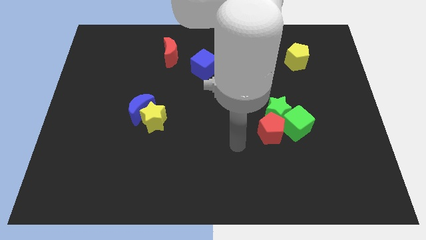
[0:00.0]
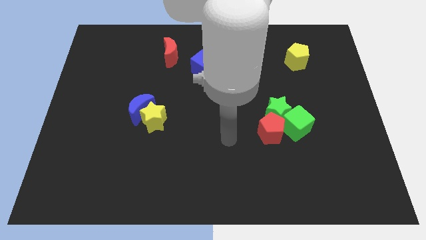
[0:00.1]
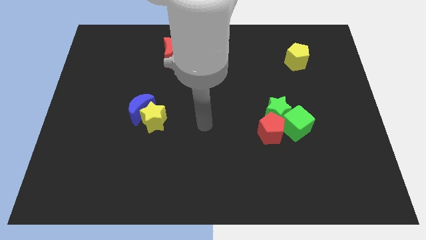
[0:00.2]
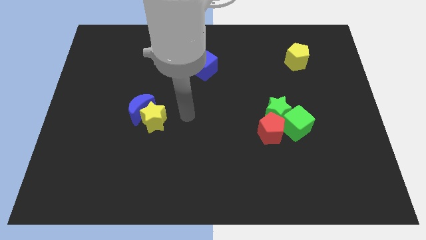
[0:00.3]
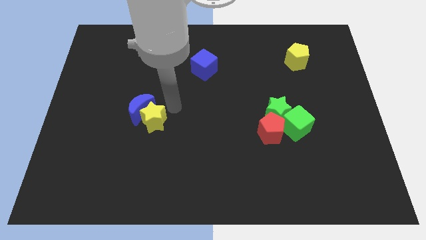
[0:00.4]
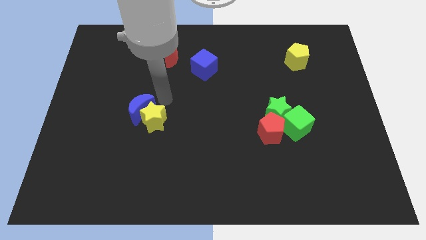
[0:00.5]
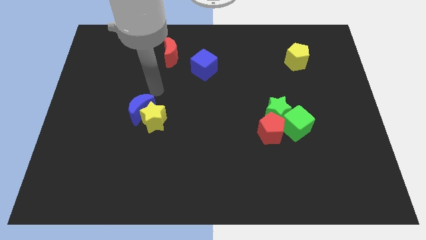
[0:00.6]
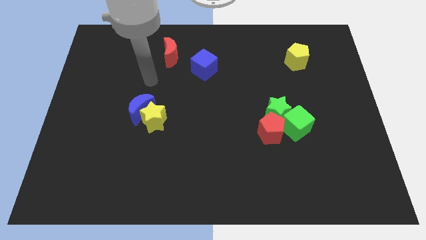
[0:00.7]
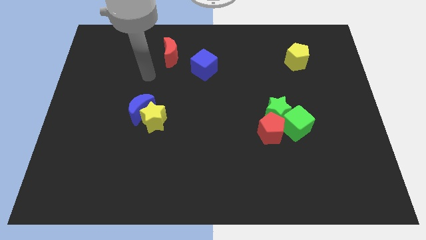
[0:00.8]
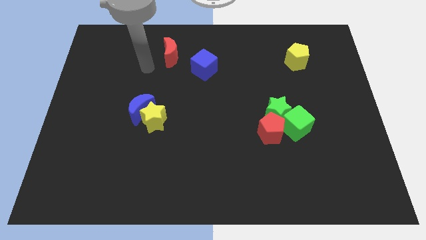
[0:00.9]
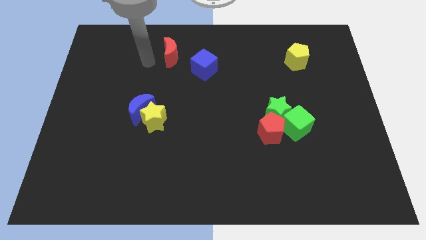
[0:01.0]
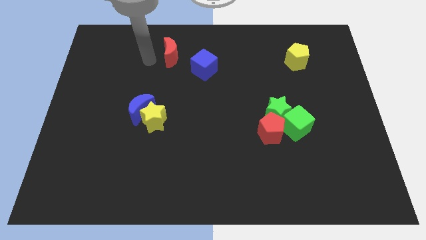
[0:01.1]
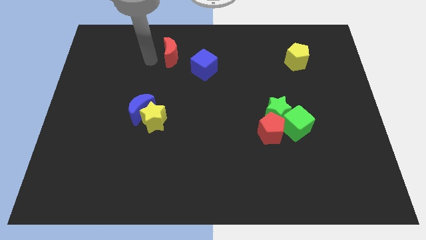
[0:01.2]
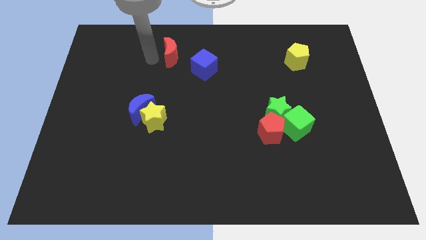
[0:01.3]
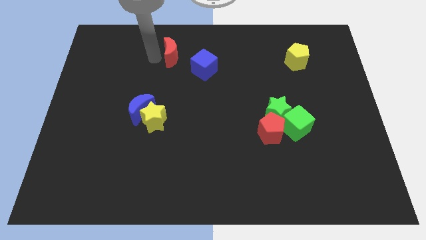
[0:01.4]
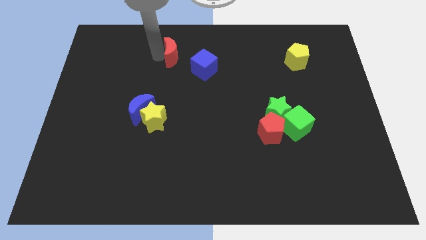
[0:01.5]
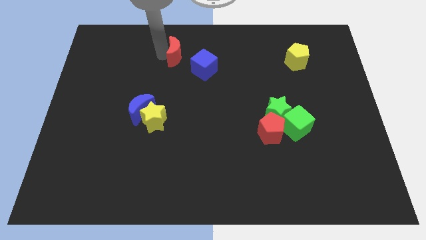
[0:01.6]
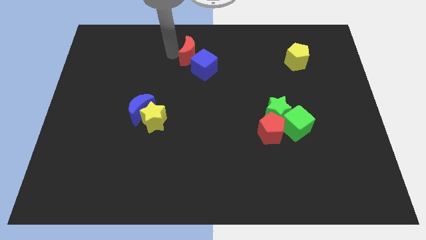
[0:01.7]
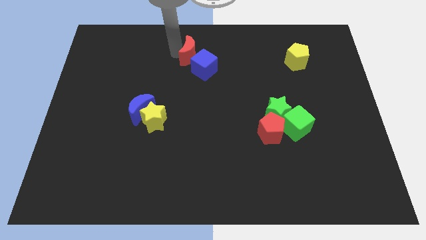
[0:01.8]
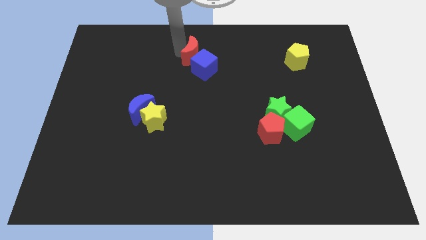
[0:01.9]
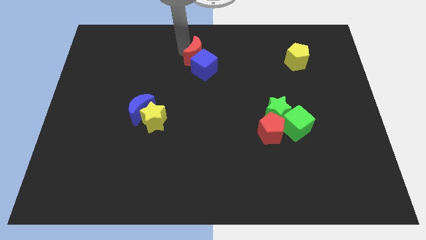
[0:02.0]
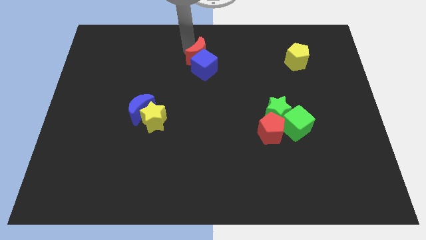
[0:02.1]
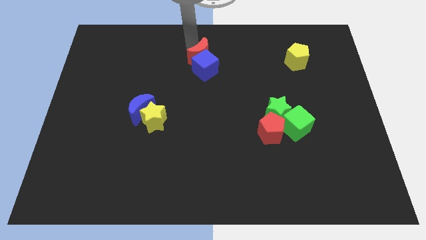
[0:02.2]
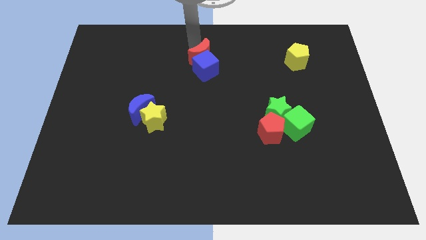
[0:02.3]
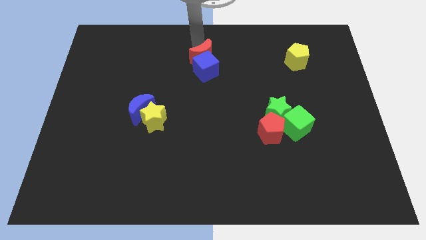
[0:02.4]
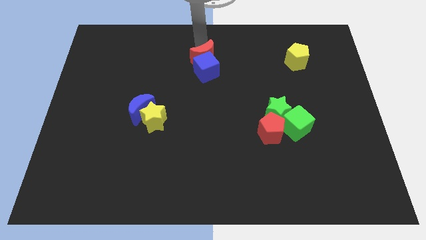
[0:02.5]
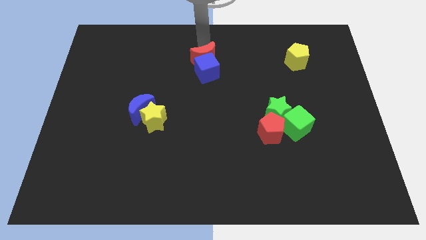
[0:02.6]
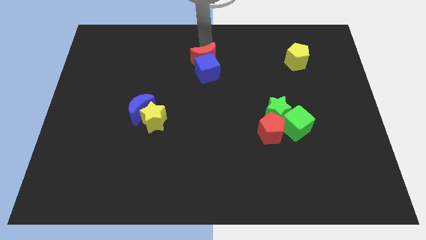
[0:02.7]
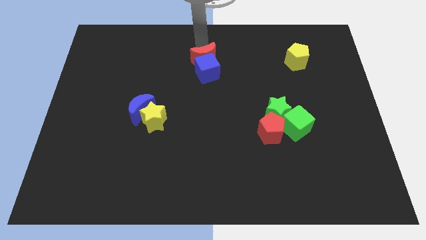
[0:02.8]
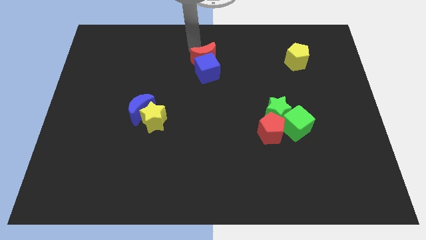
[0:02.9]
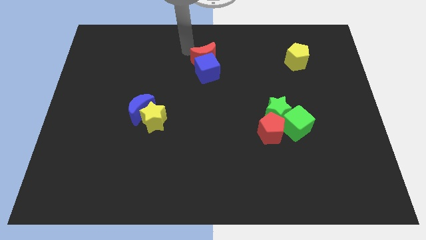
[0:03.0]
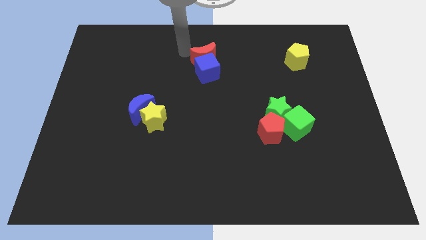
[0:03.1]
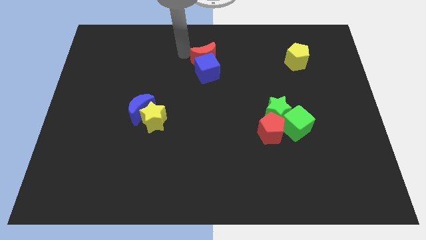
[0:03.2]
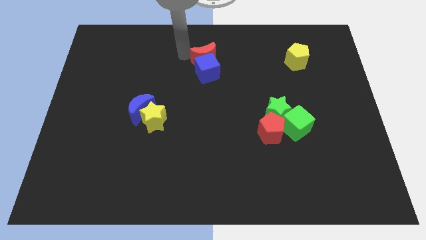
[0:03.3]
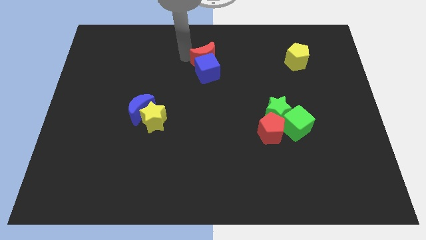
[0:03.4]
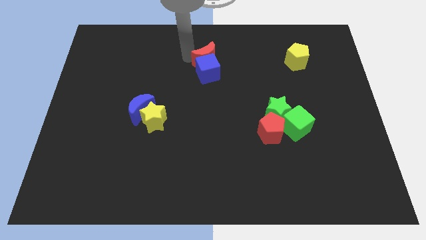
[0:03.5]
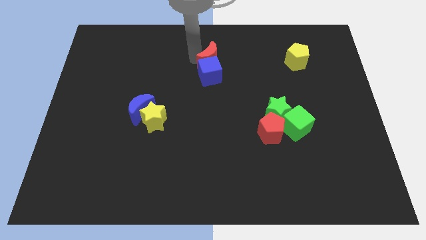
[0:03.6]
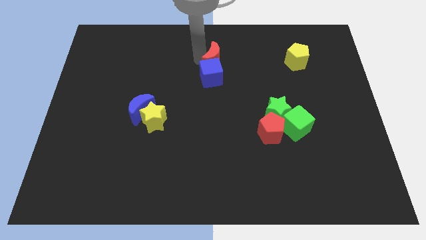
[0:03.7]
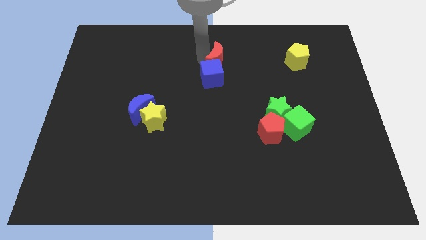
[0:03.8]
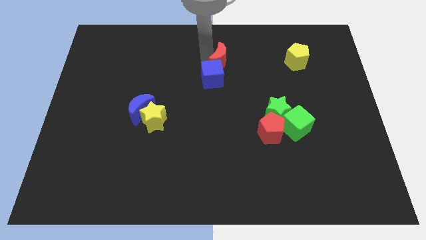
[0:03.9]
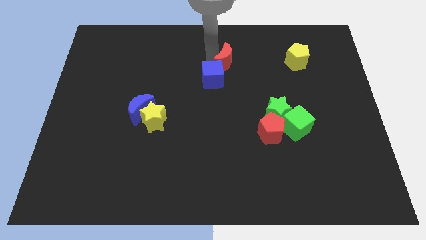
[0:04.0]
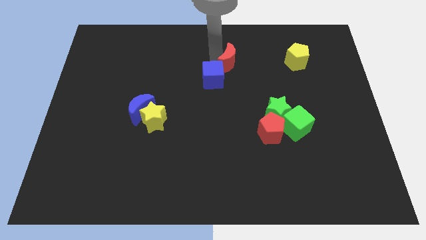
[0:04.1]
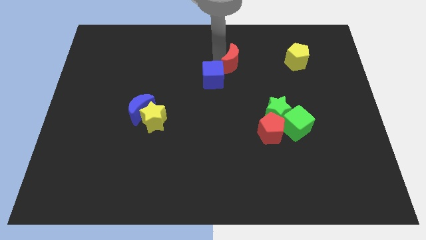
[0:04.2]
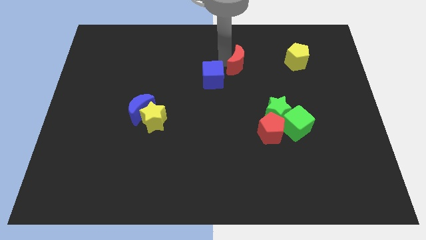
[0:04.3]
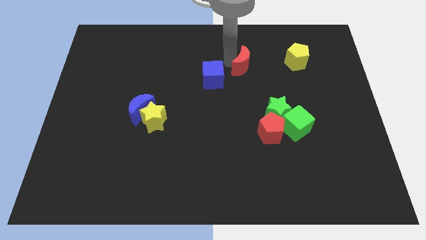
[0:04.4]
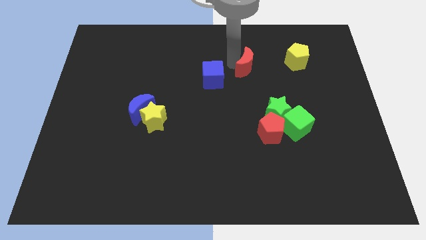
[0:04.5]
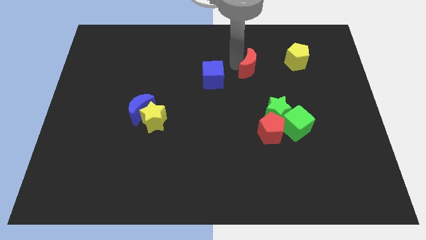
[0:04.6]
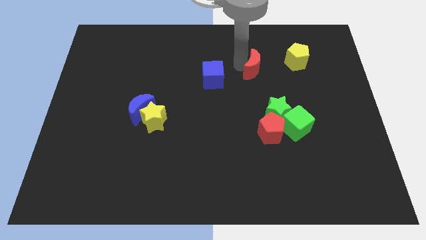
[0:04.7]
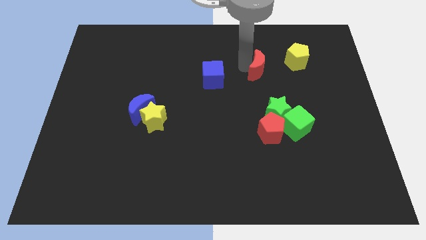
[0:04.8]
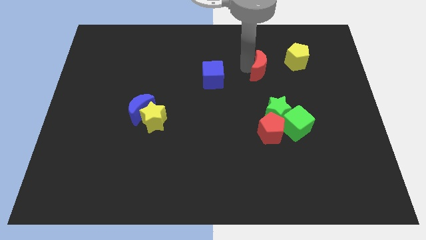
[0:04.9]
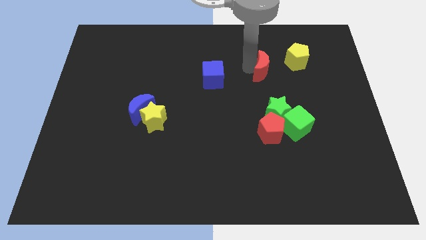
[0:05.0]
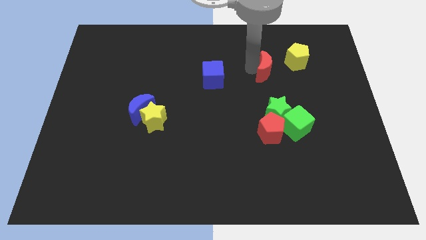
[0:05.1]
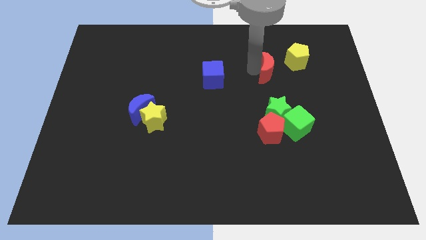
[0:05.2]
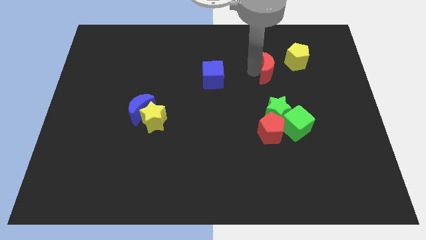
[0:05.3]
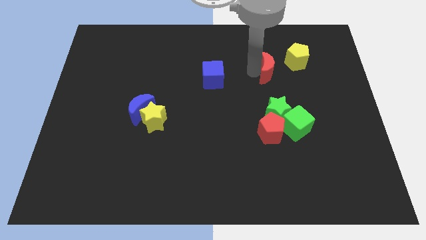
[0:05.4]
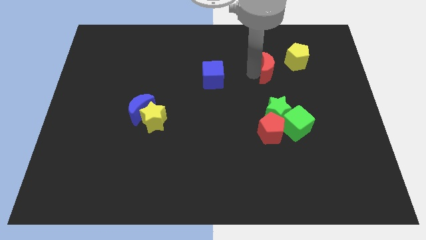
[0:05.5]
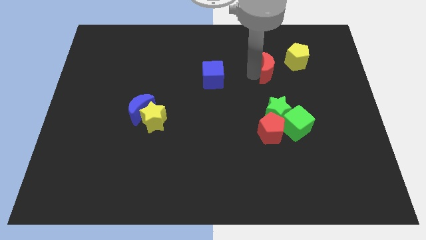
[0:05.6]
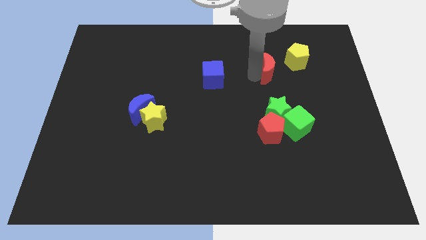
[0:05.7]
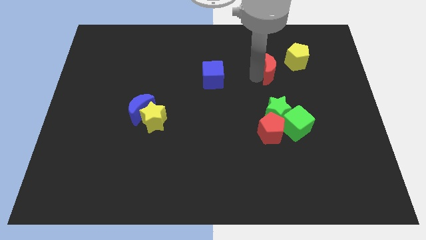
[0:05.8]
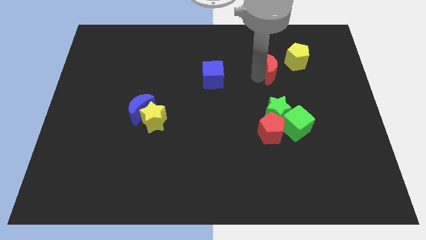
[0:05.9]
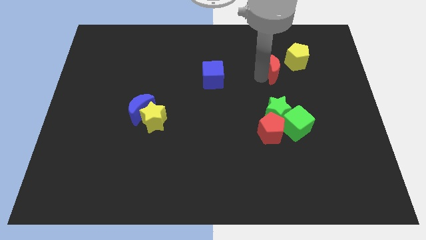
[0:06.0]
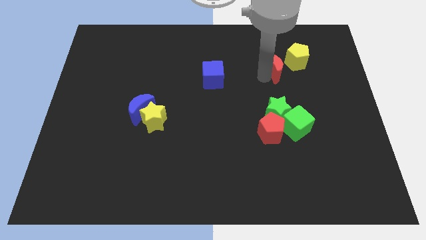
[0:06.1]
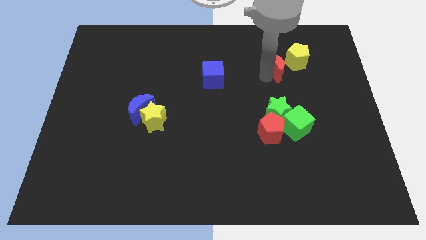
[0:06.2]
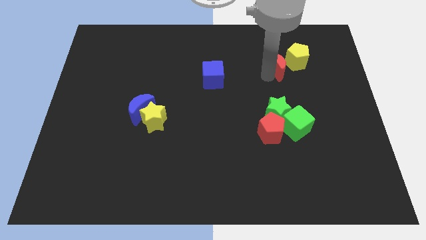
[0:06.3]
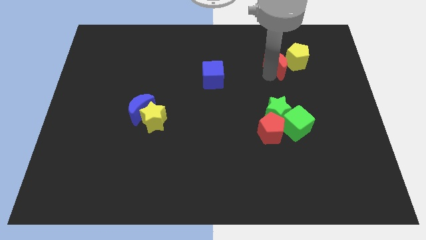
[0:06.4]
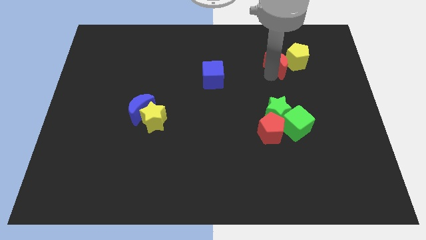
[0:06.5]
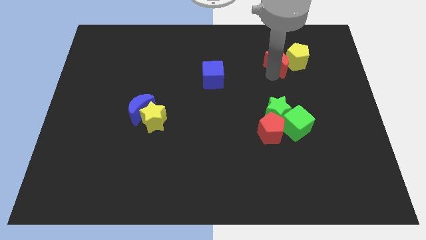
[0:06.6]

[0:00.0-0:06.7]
slide the red moon next to the yellow pentagon

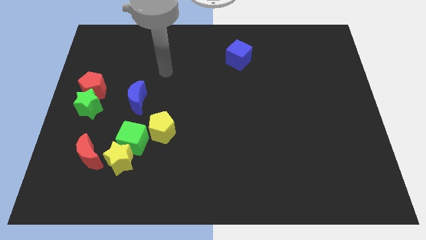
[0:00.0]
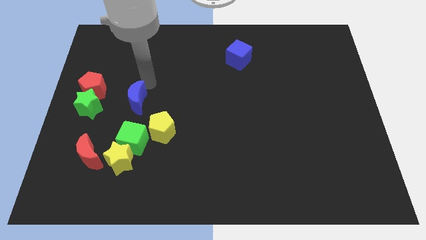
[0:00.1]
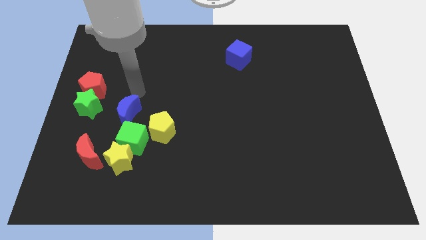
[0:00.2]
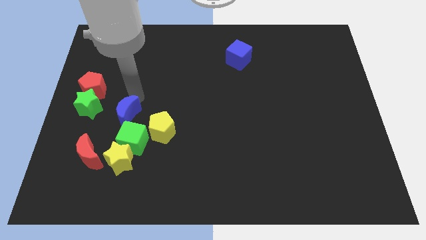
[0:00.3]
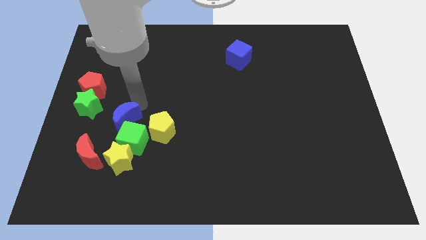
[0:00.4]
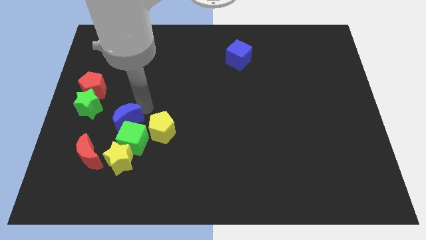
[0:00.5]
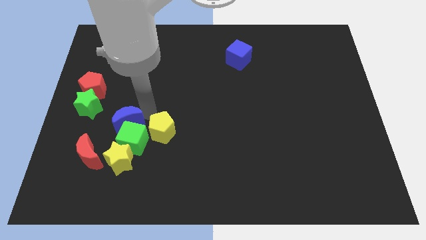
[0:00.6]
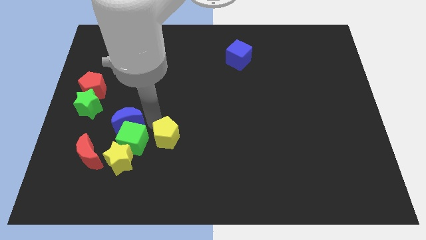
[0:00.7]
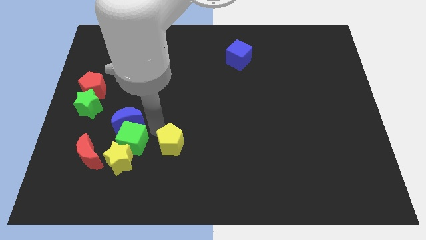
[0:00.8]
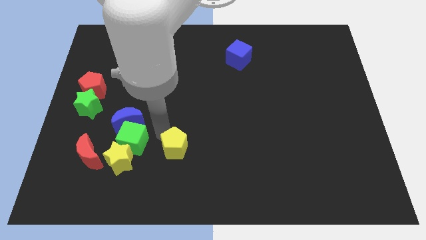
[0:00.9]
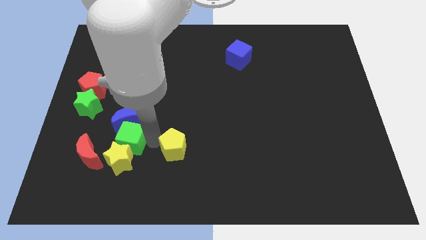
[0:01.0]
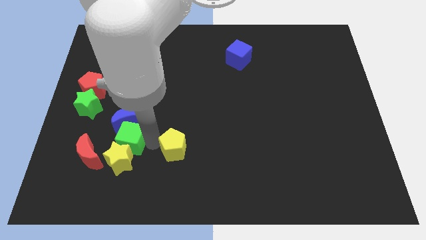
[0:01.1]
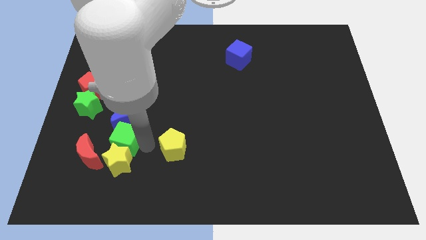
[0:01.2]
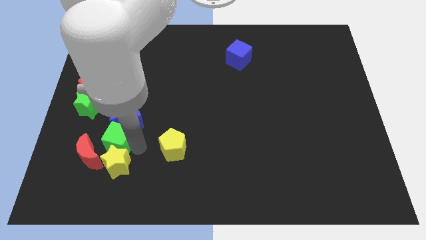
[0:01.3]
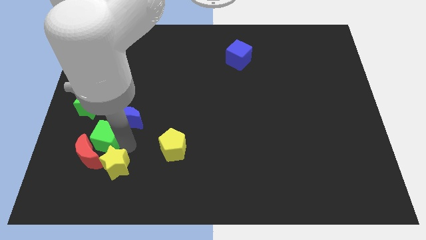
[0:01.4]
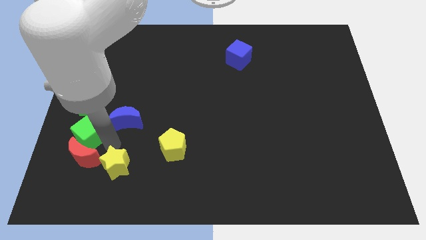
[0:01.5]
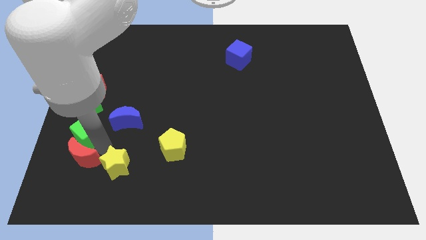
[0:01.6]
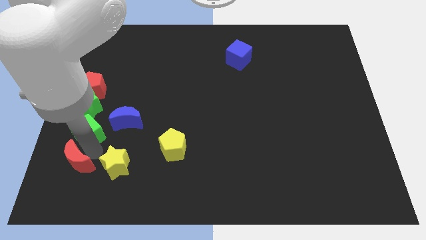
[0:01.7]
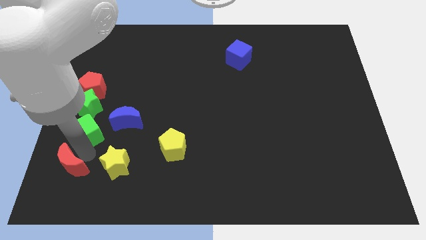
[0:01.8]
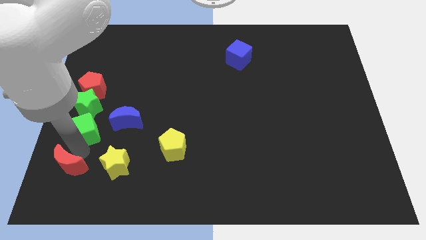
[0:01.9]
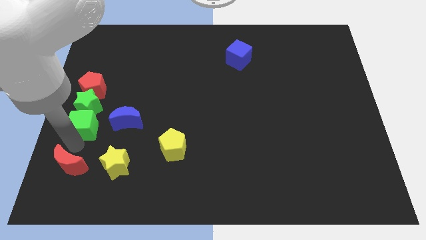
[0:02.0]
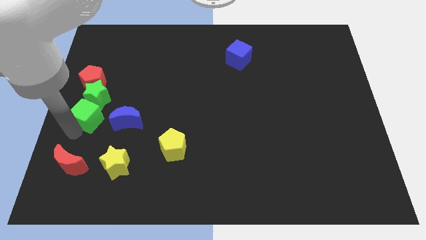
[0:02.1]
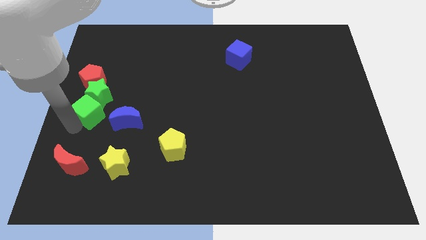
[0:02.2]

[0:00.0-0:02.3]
push the green cube towards the green star

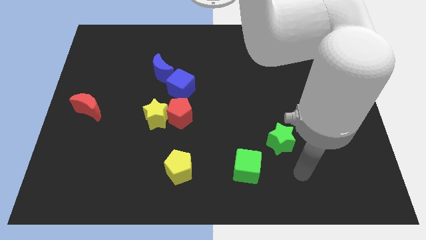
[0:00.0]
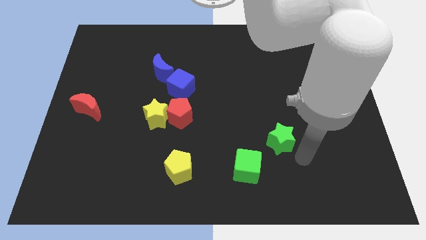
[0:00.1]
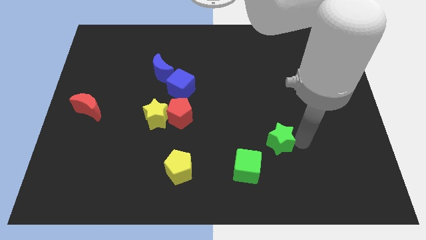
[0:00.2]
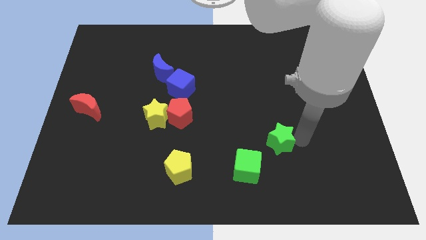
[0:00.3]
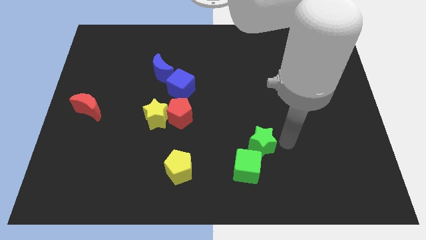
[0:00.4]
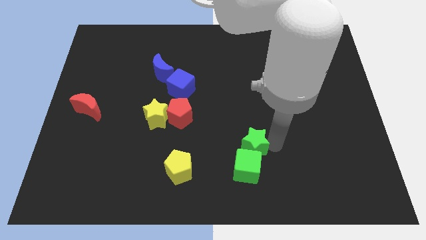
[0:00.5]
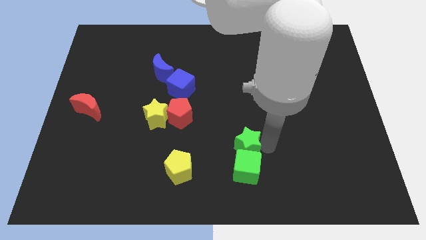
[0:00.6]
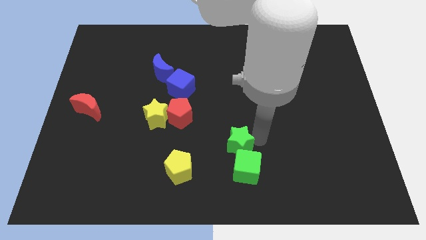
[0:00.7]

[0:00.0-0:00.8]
push the green star next to the green cube
